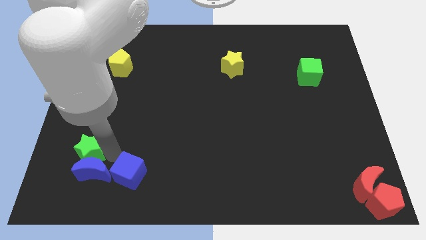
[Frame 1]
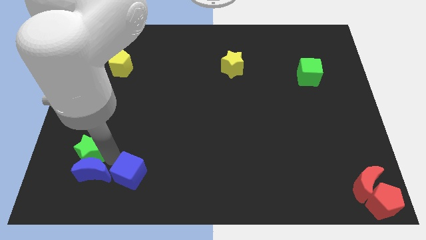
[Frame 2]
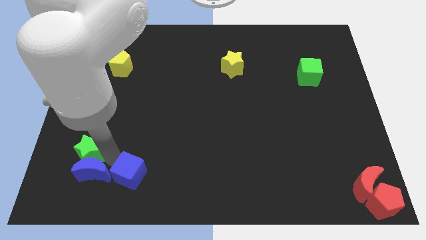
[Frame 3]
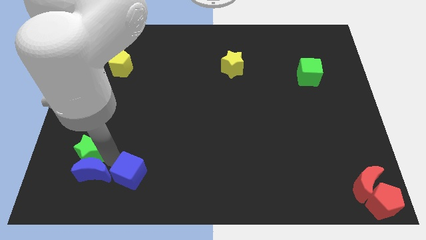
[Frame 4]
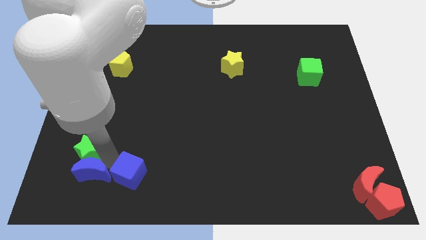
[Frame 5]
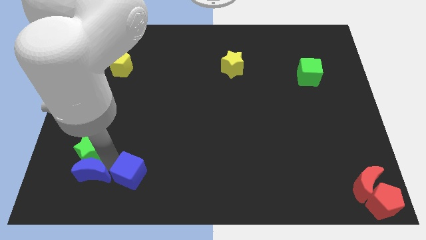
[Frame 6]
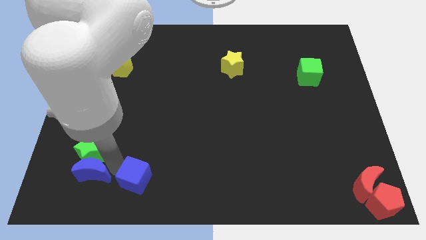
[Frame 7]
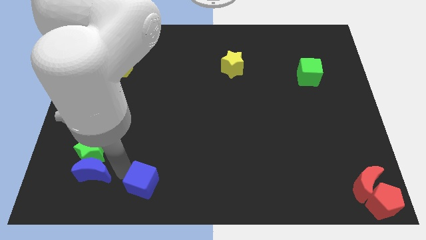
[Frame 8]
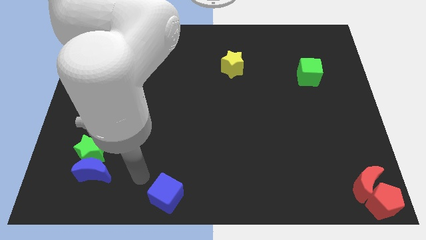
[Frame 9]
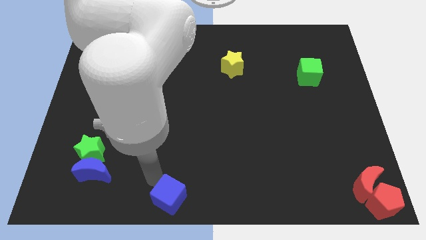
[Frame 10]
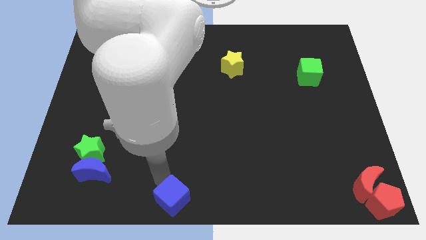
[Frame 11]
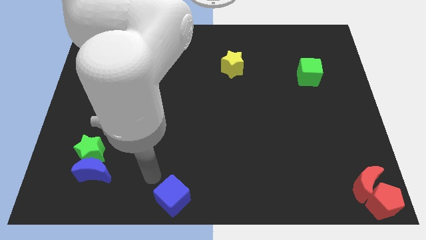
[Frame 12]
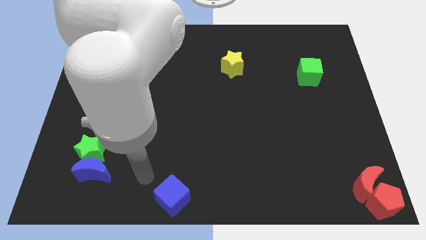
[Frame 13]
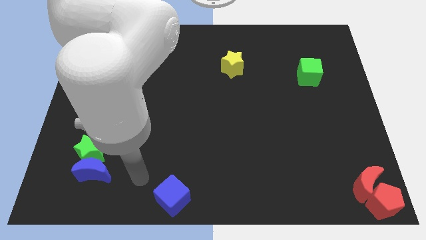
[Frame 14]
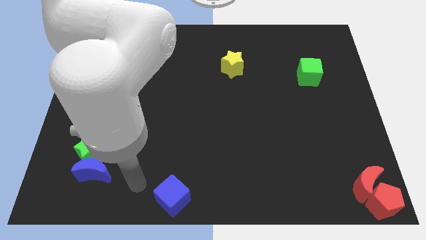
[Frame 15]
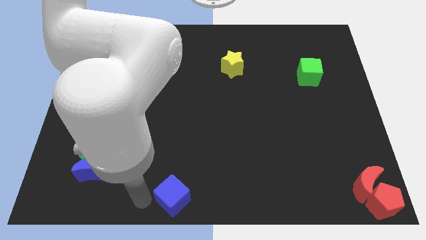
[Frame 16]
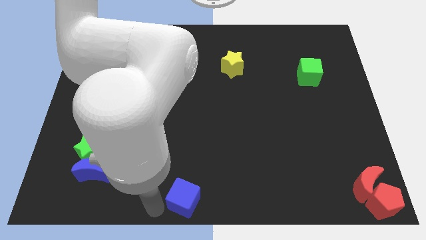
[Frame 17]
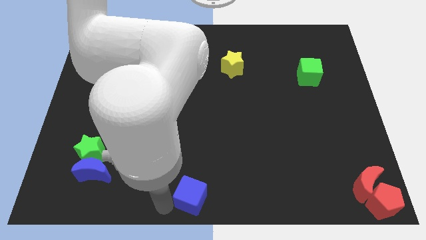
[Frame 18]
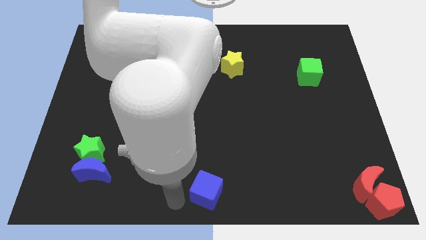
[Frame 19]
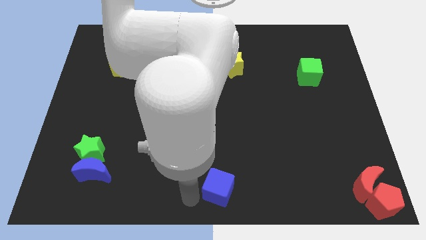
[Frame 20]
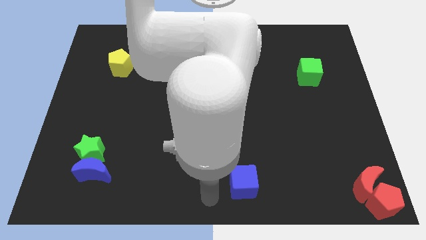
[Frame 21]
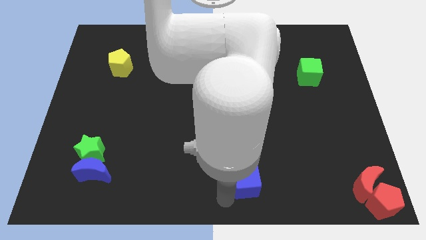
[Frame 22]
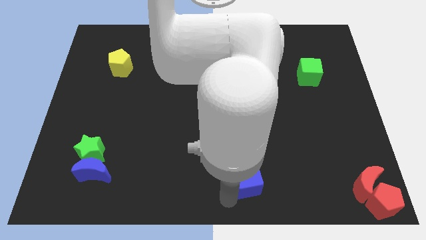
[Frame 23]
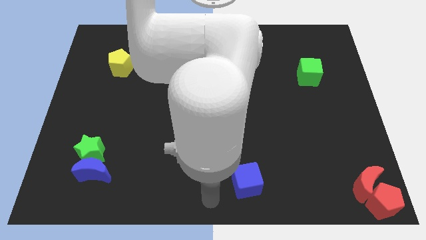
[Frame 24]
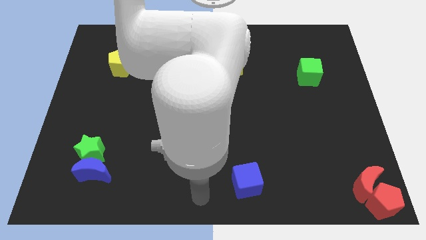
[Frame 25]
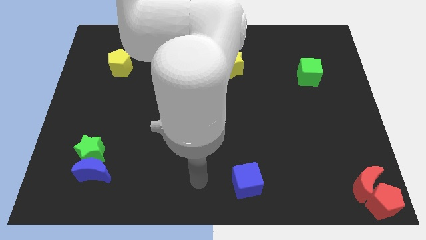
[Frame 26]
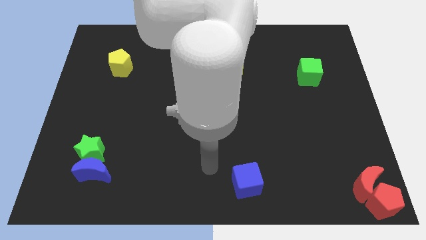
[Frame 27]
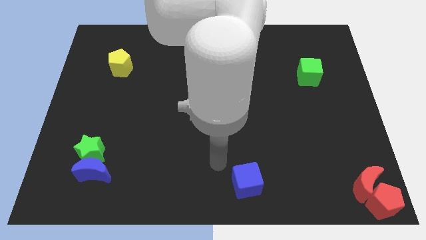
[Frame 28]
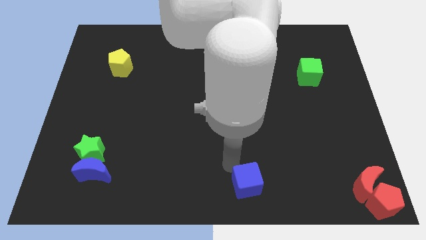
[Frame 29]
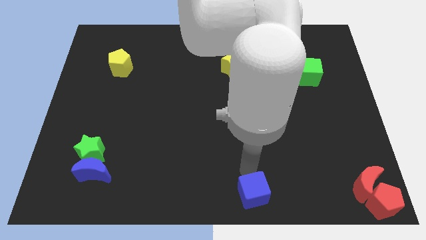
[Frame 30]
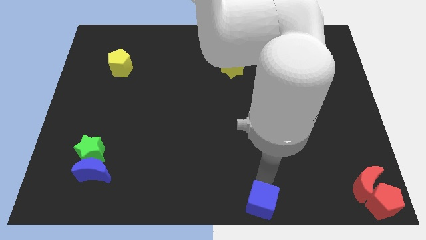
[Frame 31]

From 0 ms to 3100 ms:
separate the blue cube from the blue moon

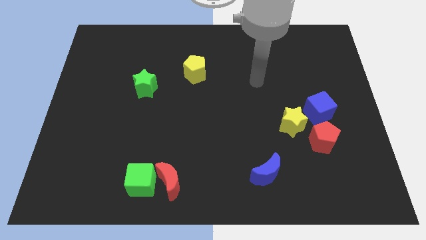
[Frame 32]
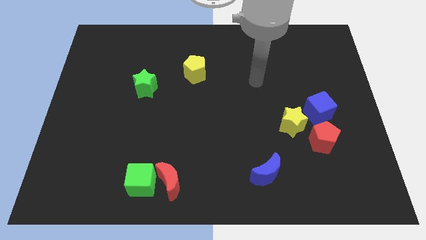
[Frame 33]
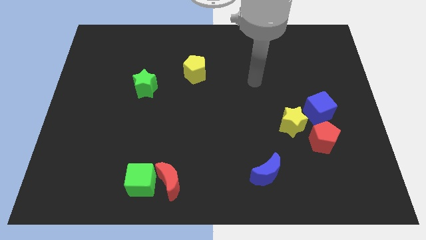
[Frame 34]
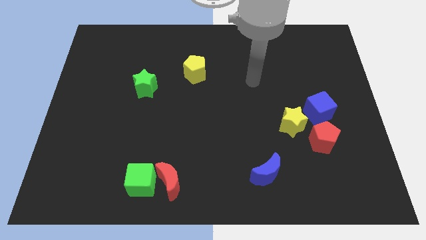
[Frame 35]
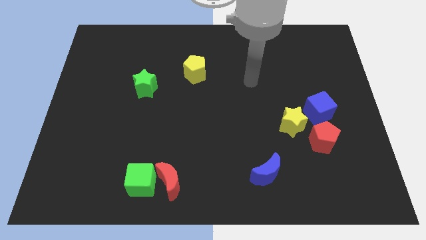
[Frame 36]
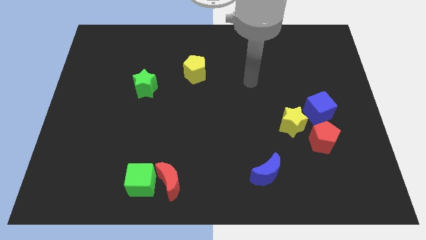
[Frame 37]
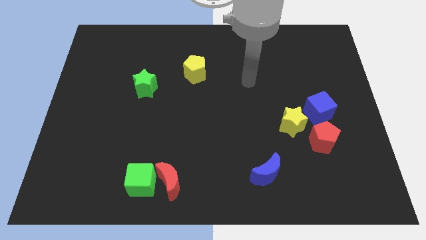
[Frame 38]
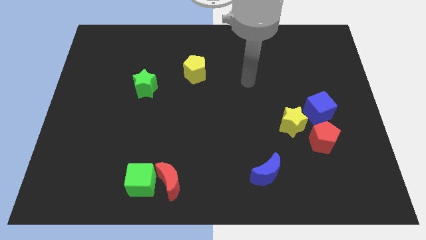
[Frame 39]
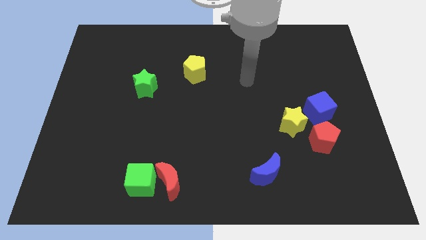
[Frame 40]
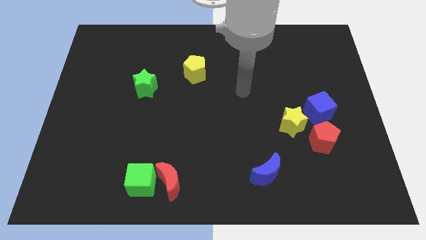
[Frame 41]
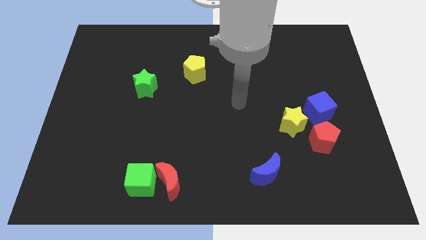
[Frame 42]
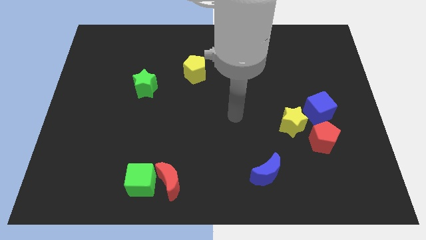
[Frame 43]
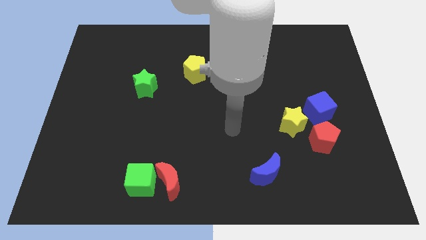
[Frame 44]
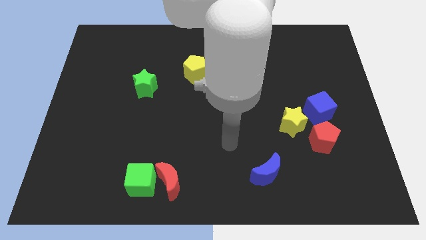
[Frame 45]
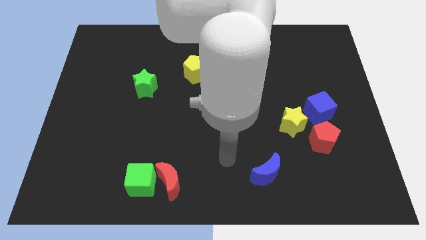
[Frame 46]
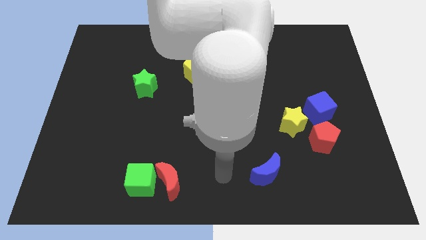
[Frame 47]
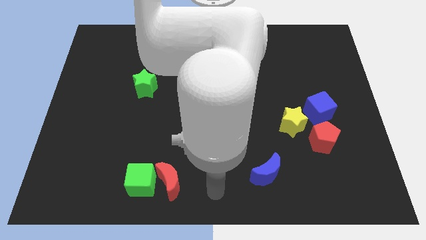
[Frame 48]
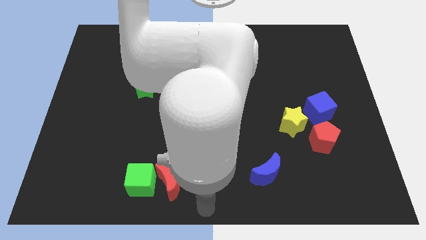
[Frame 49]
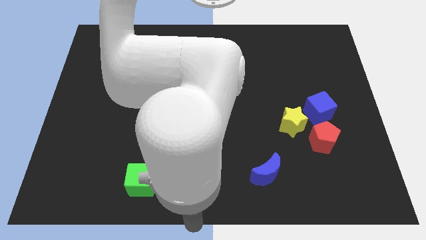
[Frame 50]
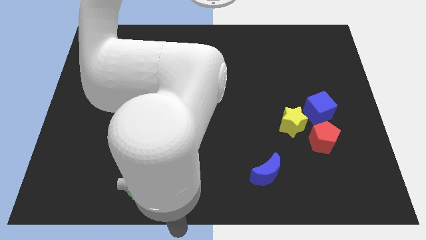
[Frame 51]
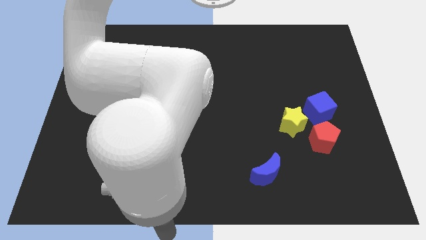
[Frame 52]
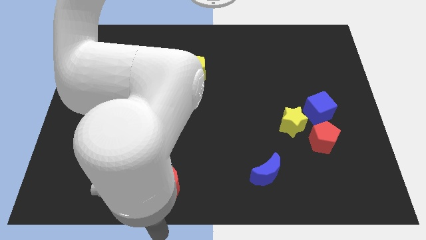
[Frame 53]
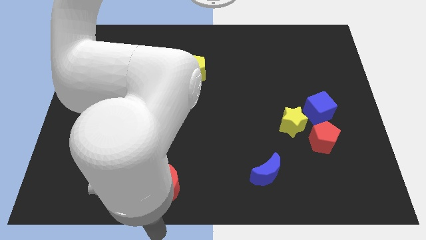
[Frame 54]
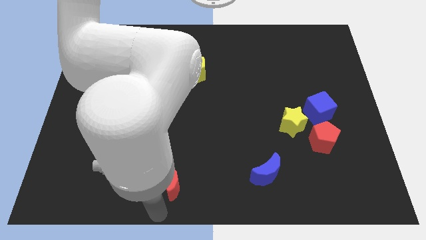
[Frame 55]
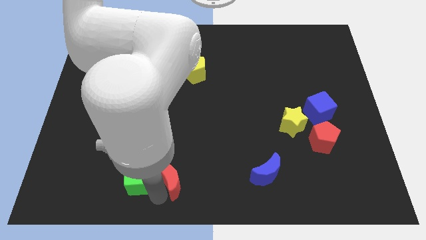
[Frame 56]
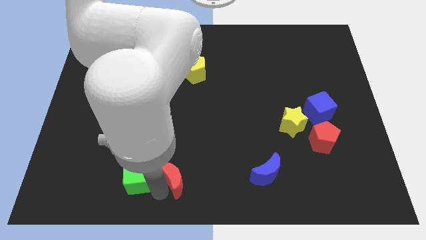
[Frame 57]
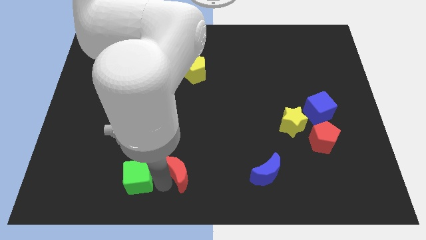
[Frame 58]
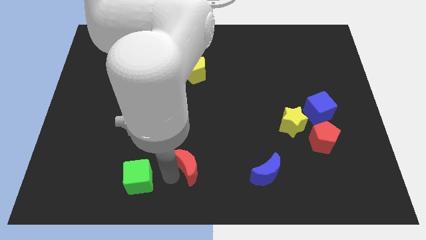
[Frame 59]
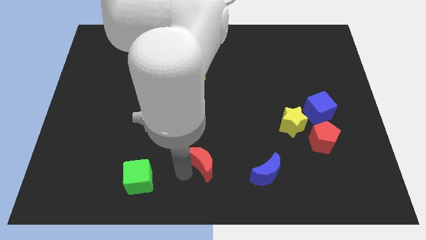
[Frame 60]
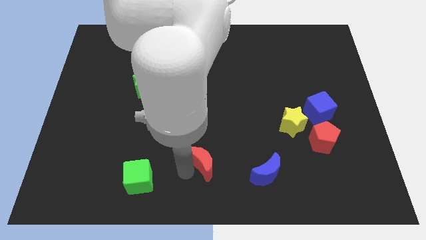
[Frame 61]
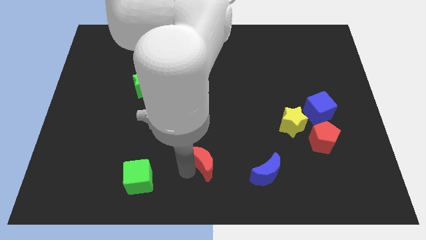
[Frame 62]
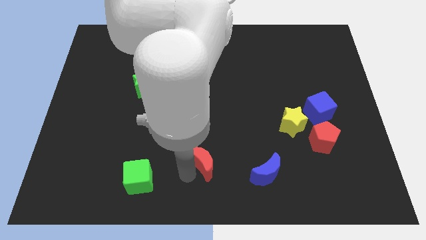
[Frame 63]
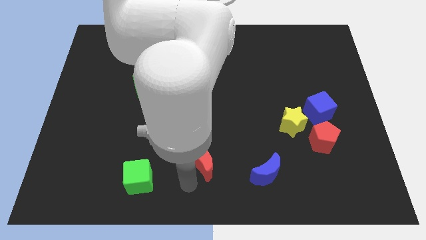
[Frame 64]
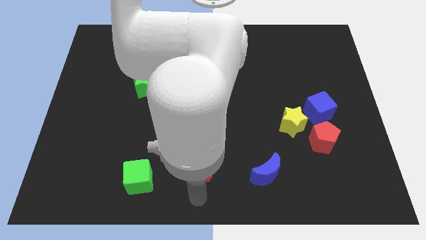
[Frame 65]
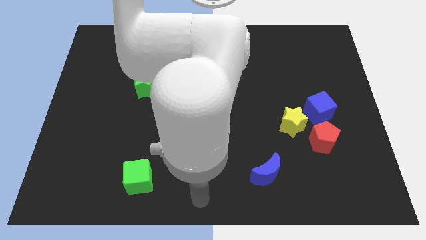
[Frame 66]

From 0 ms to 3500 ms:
place red moon to the left of blue moon

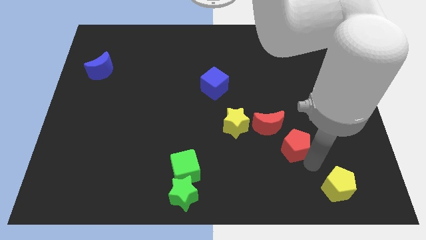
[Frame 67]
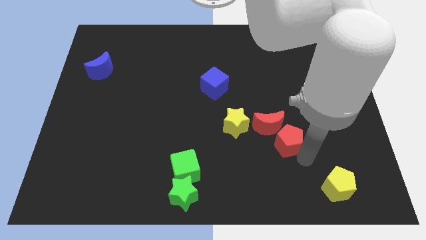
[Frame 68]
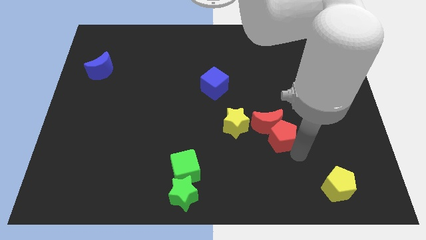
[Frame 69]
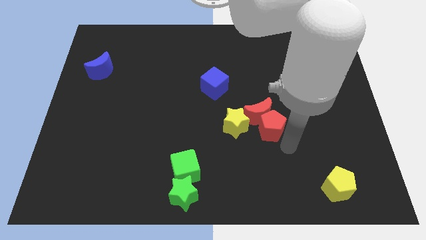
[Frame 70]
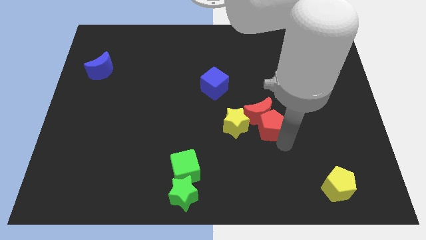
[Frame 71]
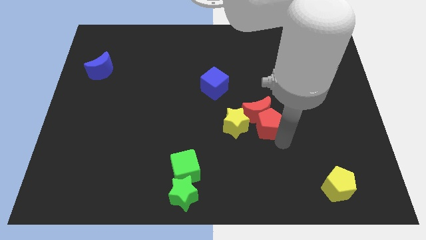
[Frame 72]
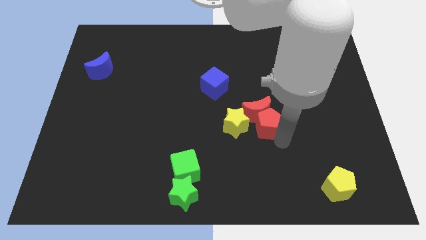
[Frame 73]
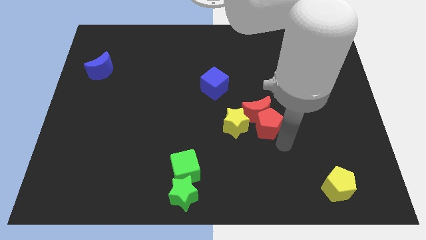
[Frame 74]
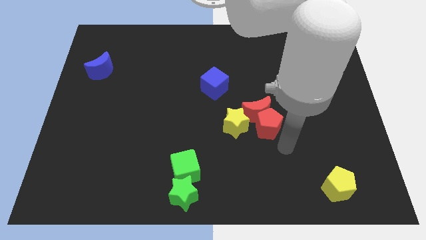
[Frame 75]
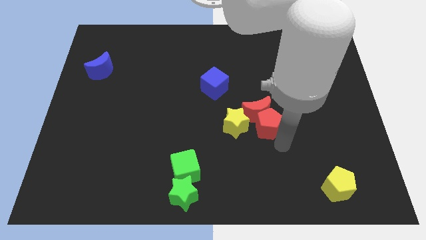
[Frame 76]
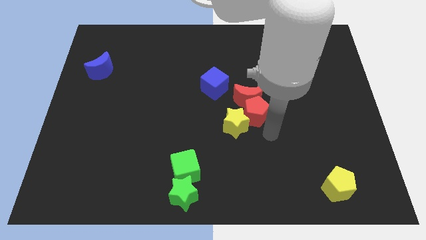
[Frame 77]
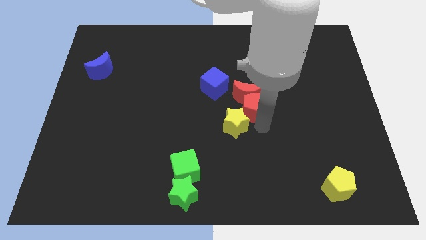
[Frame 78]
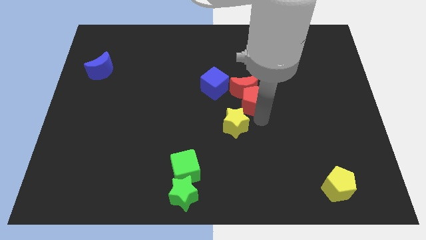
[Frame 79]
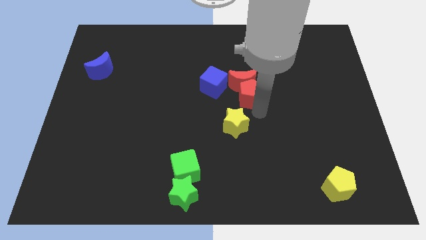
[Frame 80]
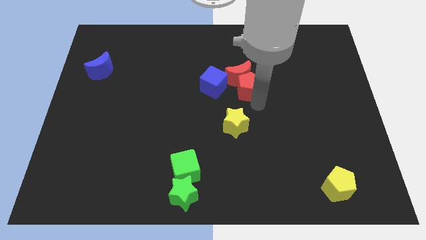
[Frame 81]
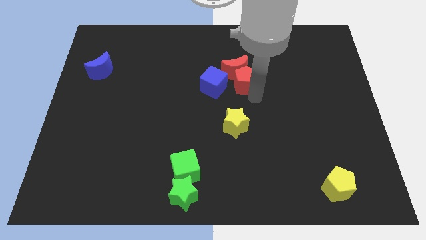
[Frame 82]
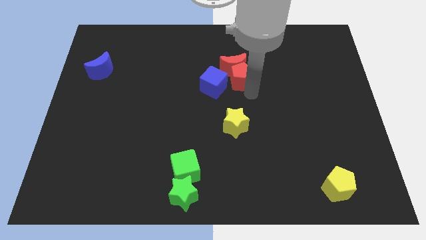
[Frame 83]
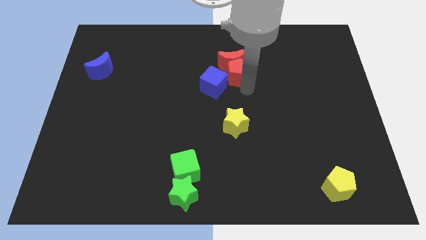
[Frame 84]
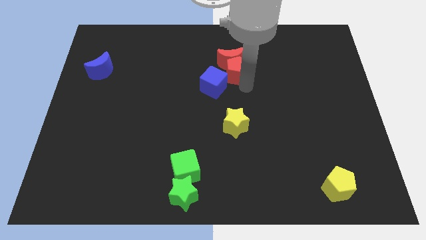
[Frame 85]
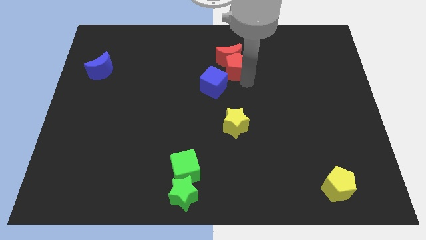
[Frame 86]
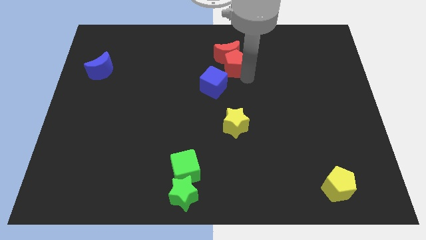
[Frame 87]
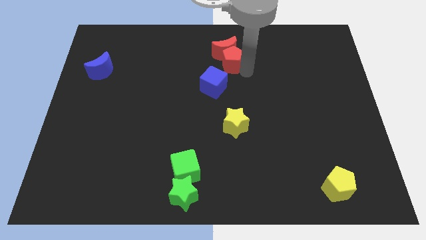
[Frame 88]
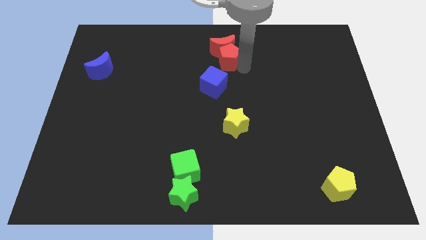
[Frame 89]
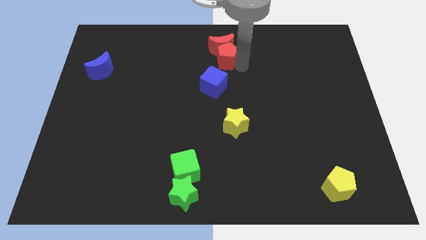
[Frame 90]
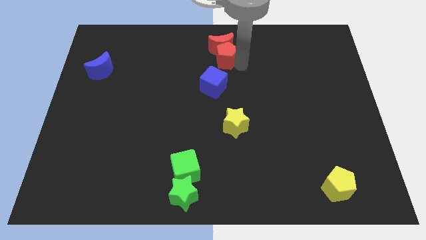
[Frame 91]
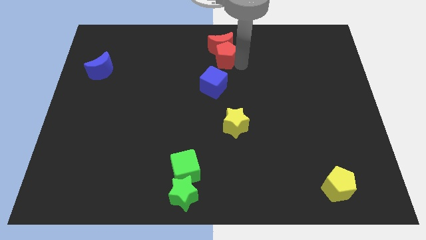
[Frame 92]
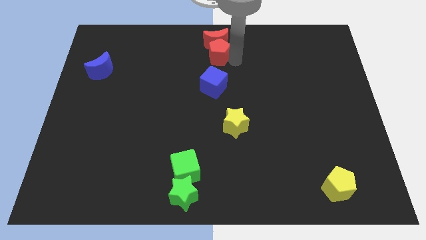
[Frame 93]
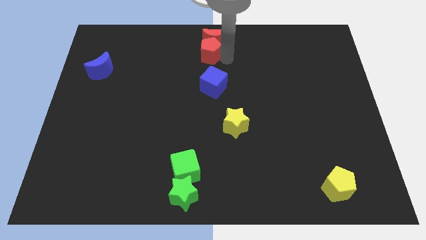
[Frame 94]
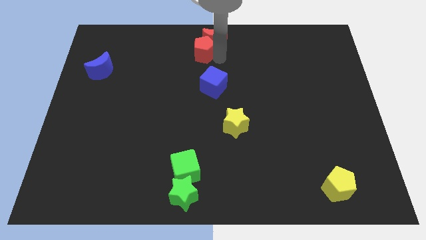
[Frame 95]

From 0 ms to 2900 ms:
push the red blocks towards top of blue cube
